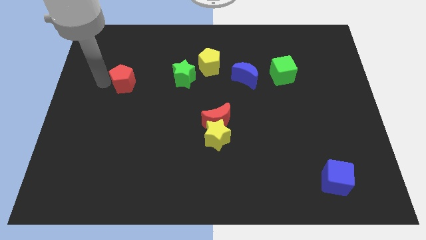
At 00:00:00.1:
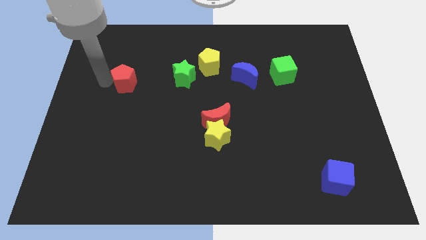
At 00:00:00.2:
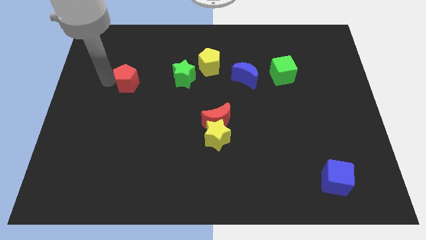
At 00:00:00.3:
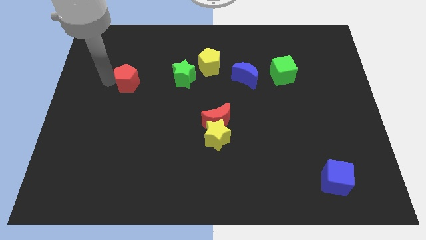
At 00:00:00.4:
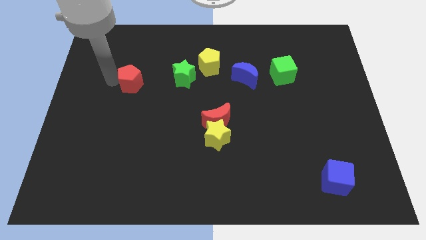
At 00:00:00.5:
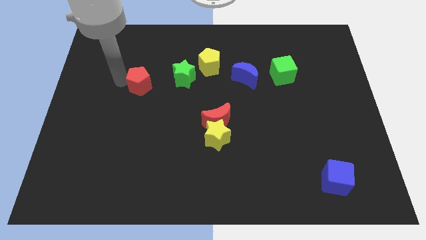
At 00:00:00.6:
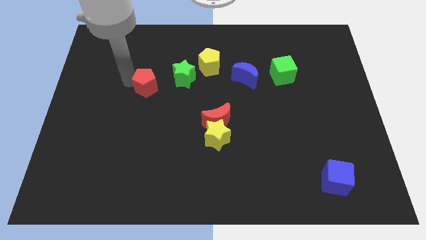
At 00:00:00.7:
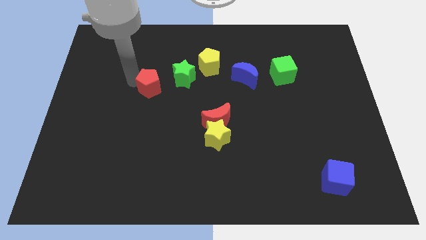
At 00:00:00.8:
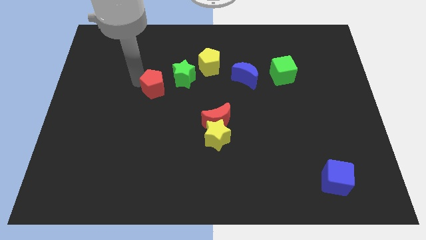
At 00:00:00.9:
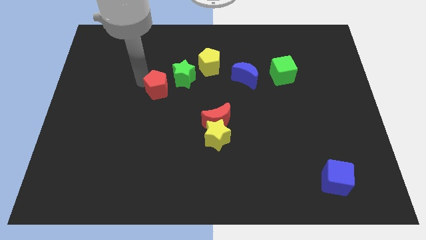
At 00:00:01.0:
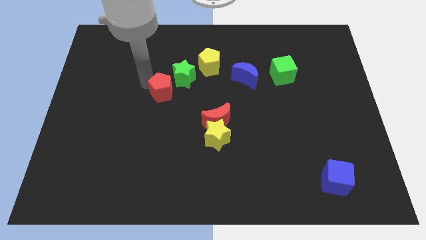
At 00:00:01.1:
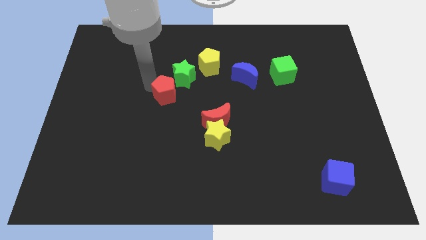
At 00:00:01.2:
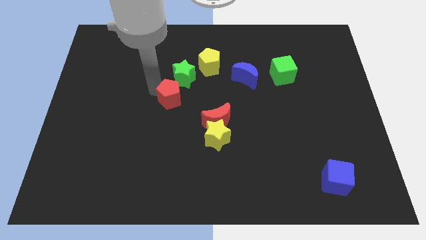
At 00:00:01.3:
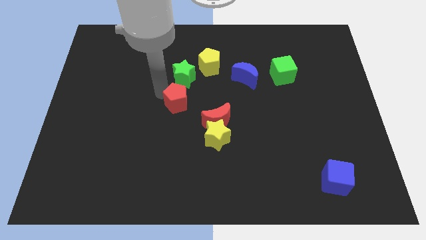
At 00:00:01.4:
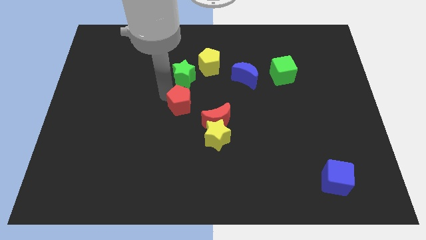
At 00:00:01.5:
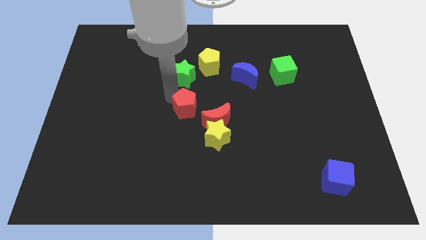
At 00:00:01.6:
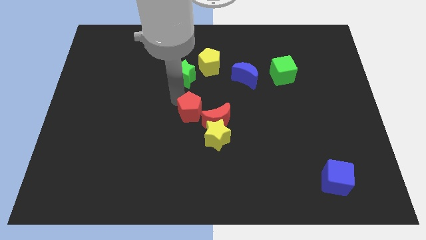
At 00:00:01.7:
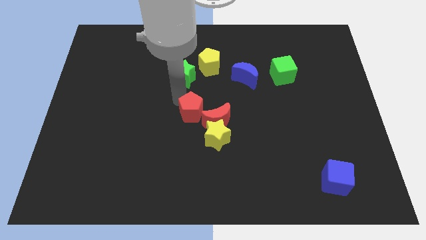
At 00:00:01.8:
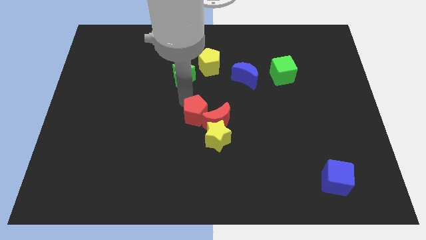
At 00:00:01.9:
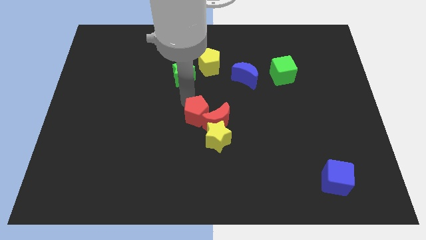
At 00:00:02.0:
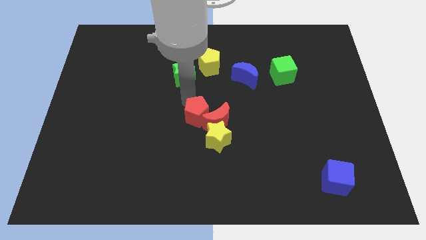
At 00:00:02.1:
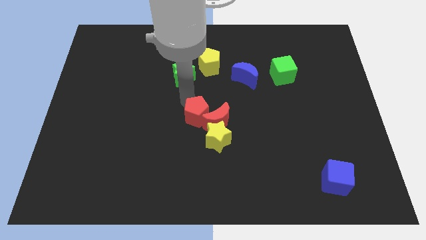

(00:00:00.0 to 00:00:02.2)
move the red pentagon near to the red moon

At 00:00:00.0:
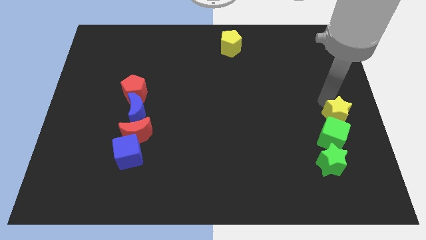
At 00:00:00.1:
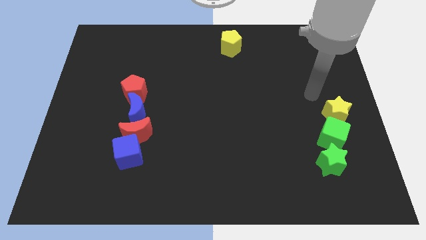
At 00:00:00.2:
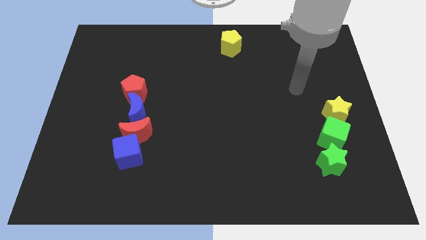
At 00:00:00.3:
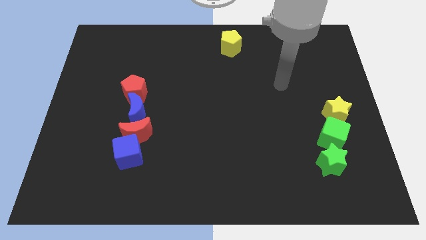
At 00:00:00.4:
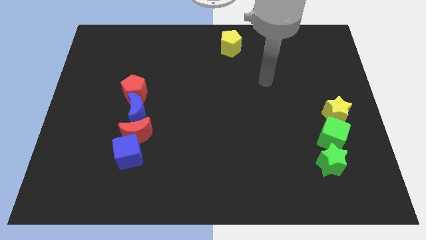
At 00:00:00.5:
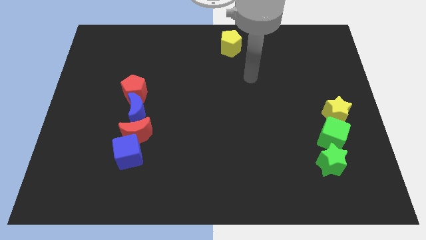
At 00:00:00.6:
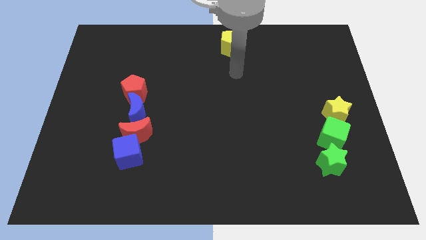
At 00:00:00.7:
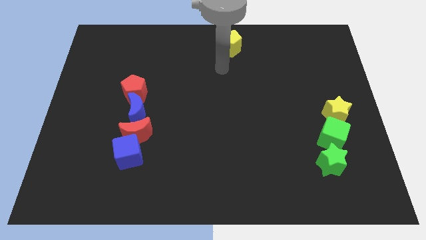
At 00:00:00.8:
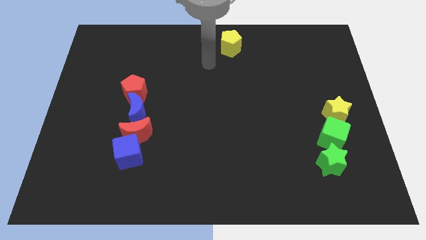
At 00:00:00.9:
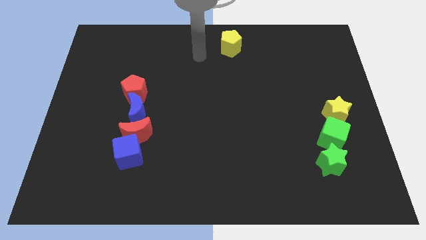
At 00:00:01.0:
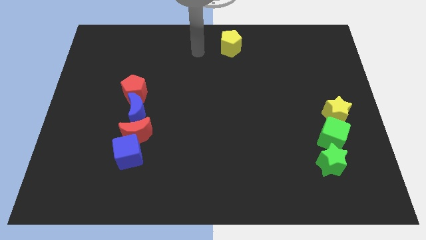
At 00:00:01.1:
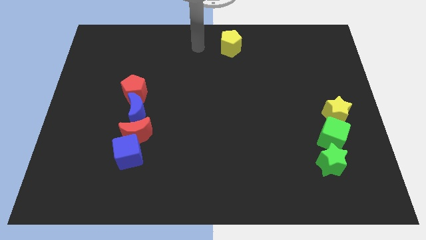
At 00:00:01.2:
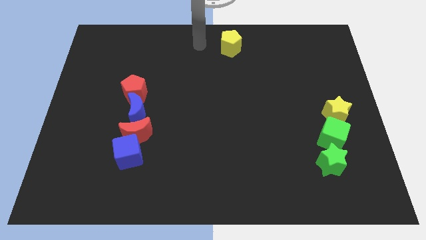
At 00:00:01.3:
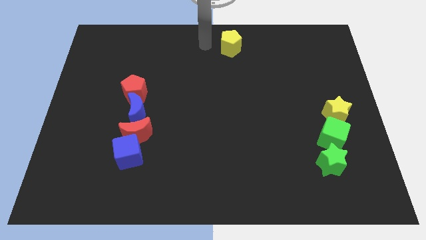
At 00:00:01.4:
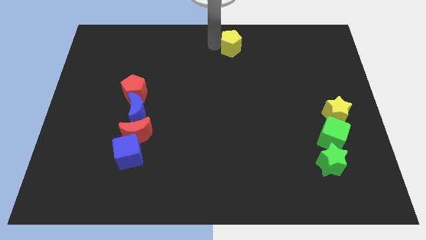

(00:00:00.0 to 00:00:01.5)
move your arm towards the yellow pentagon

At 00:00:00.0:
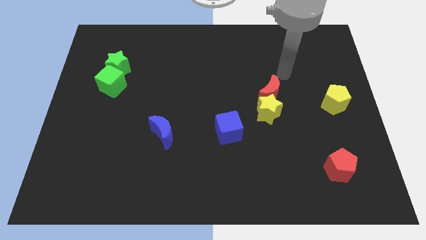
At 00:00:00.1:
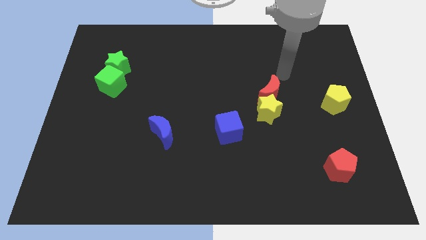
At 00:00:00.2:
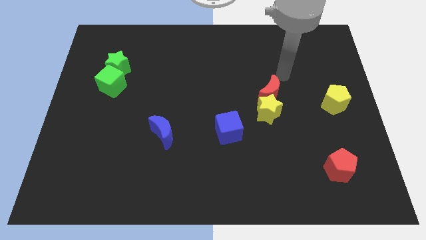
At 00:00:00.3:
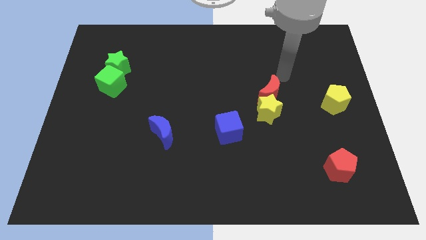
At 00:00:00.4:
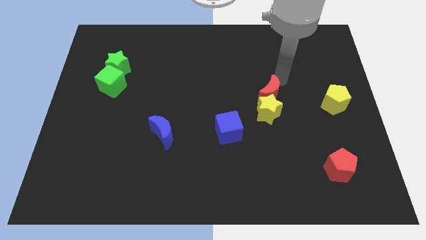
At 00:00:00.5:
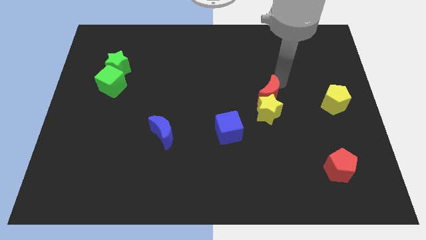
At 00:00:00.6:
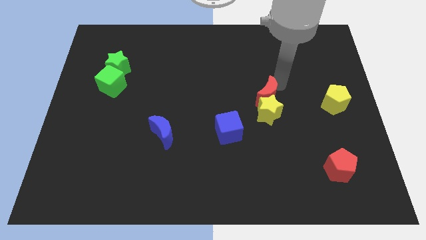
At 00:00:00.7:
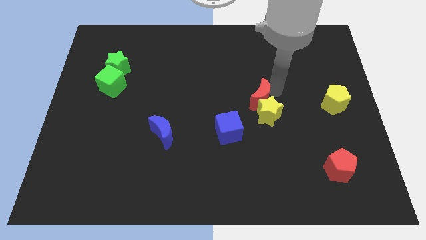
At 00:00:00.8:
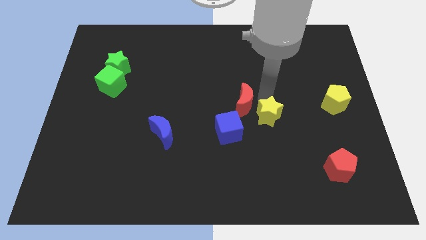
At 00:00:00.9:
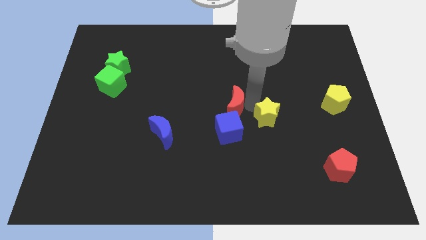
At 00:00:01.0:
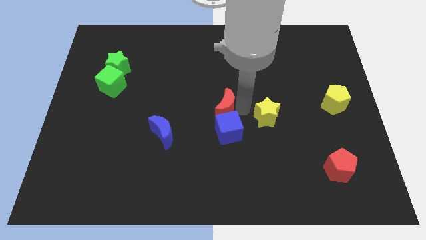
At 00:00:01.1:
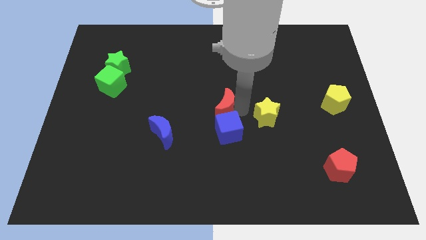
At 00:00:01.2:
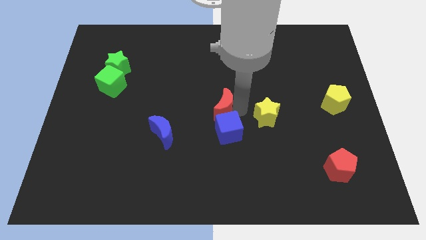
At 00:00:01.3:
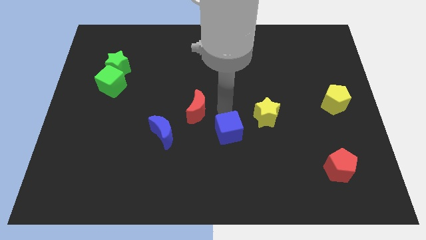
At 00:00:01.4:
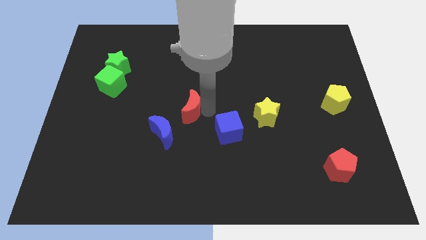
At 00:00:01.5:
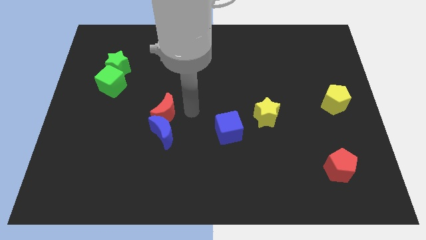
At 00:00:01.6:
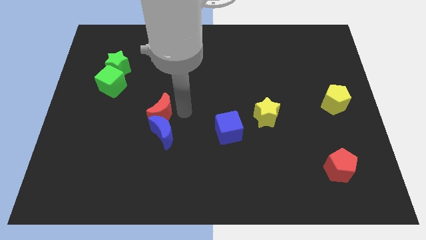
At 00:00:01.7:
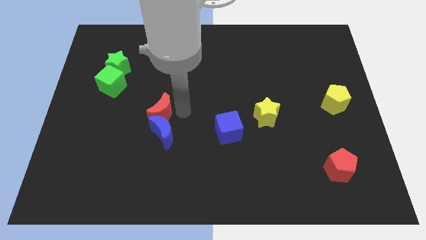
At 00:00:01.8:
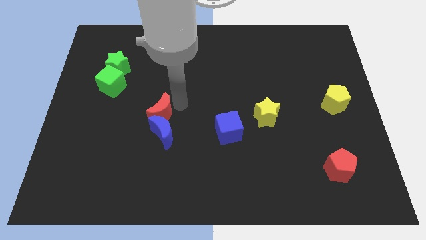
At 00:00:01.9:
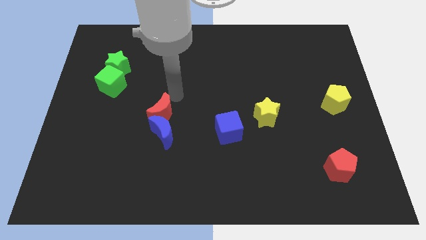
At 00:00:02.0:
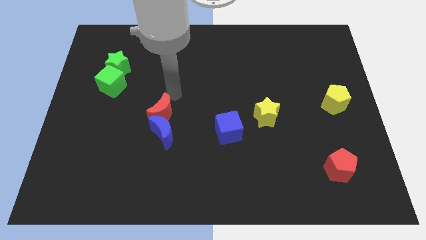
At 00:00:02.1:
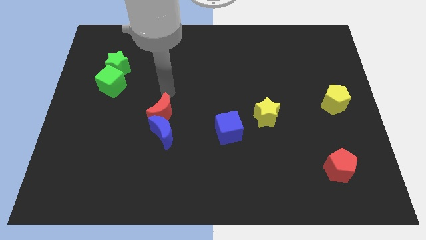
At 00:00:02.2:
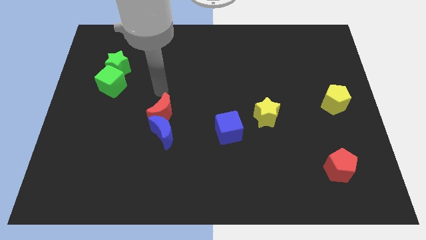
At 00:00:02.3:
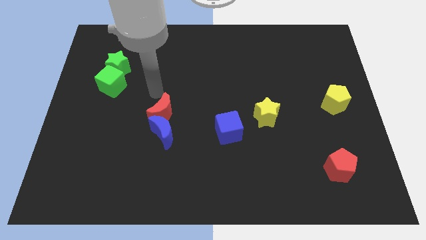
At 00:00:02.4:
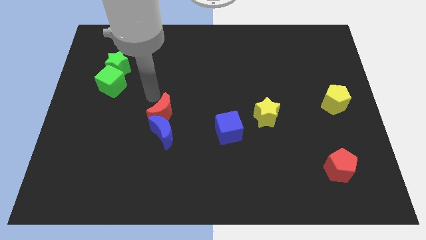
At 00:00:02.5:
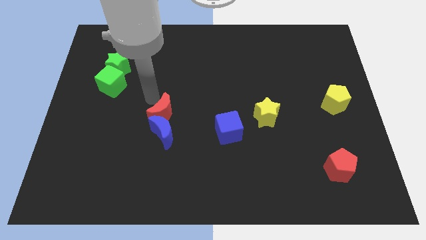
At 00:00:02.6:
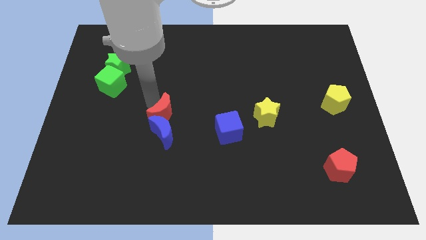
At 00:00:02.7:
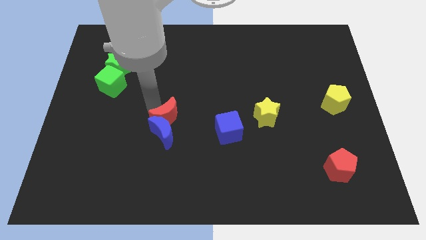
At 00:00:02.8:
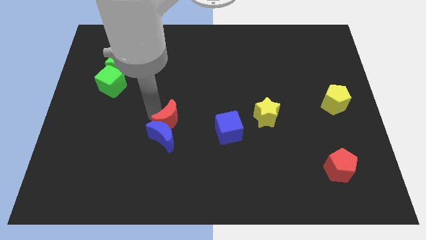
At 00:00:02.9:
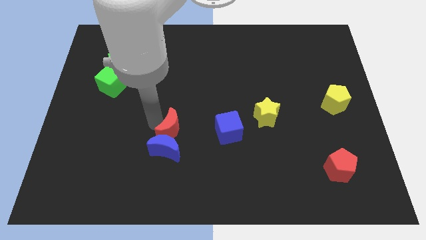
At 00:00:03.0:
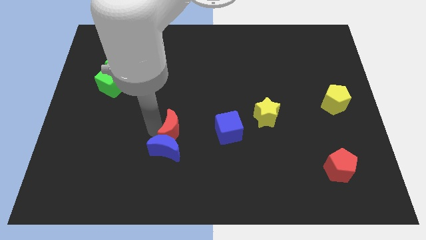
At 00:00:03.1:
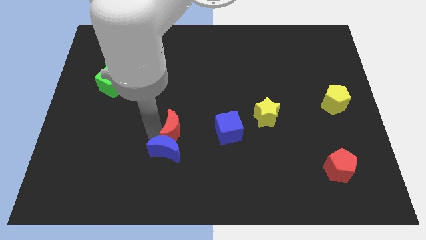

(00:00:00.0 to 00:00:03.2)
push the red moon into the blue moon

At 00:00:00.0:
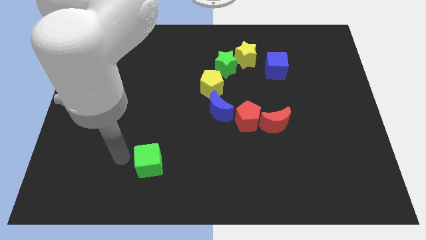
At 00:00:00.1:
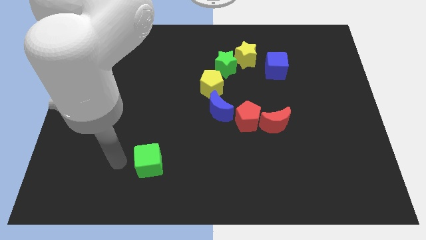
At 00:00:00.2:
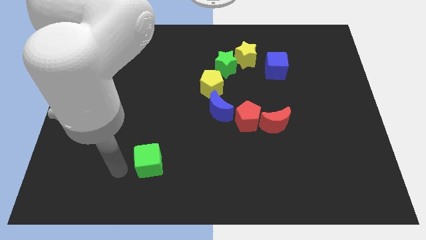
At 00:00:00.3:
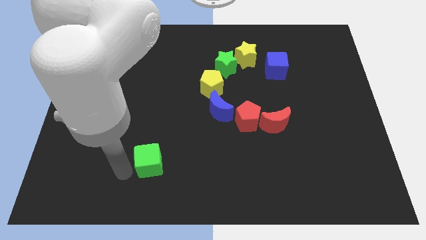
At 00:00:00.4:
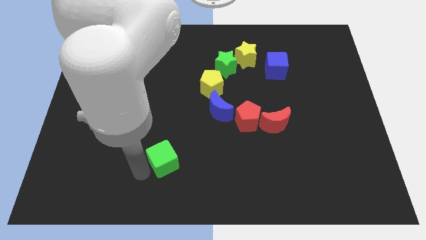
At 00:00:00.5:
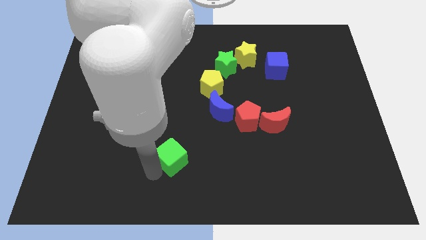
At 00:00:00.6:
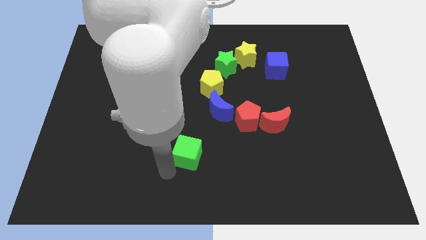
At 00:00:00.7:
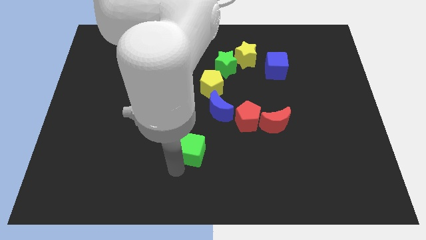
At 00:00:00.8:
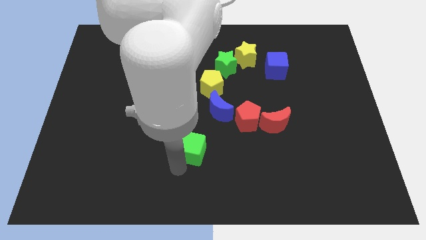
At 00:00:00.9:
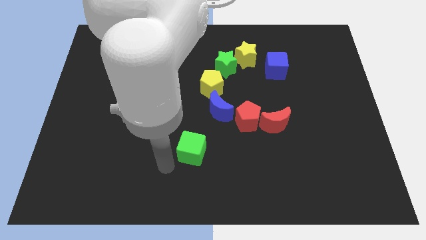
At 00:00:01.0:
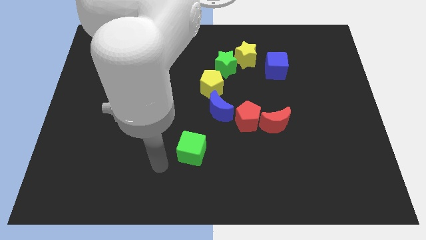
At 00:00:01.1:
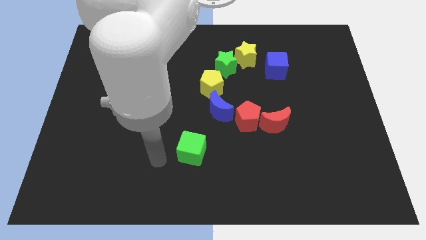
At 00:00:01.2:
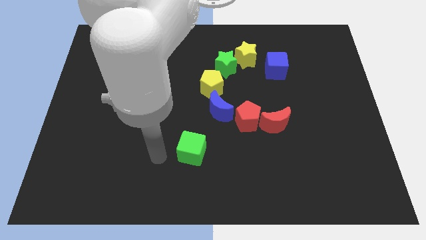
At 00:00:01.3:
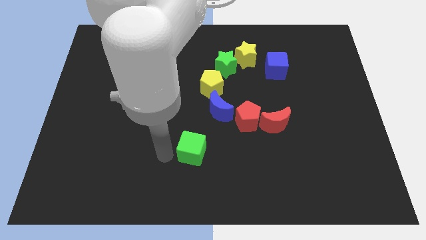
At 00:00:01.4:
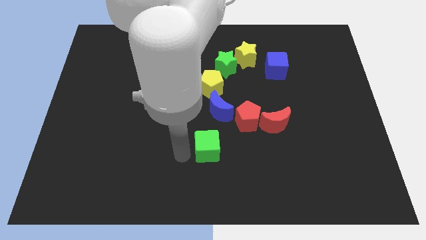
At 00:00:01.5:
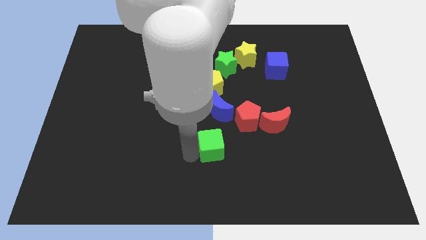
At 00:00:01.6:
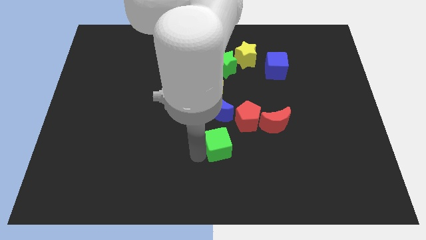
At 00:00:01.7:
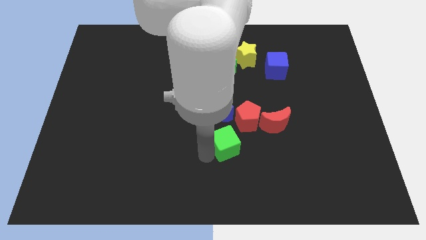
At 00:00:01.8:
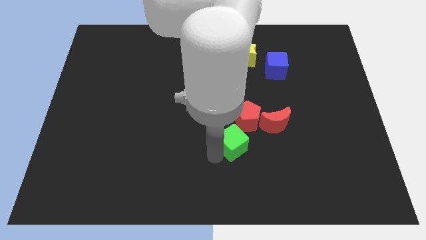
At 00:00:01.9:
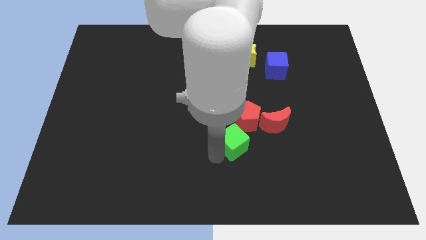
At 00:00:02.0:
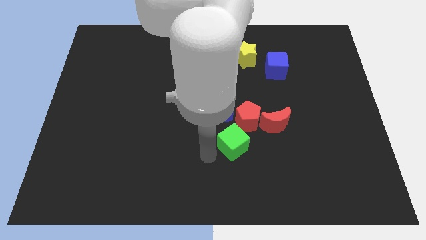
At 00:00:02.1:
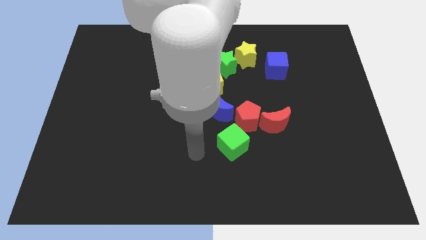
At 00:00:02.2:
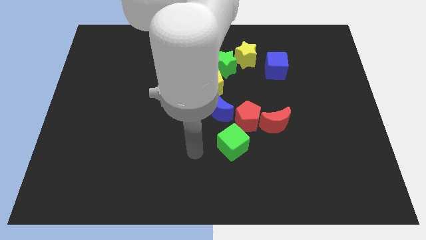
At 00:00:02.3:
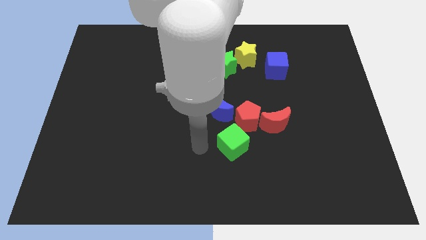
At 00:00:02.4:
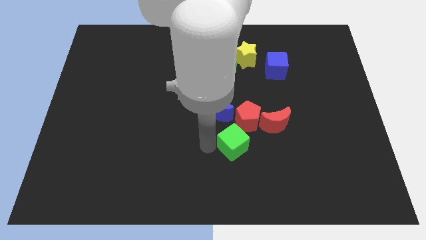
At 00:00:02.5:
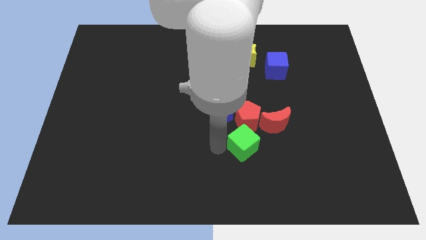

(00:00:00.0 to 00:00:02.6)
move green cube below the red pentagon
